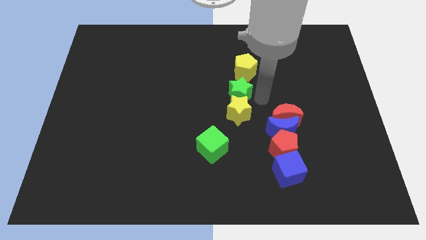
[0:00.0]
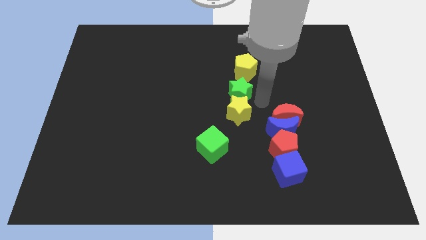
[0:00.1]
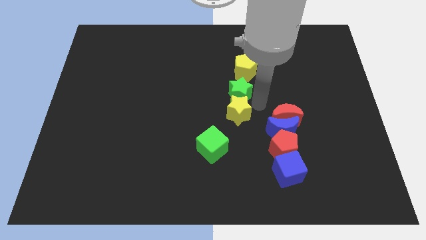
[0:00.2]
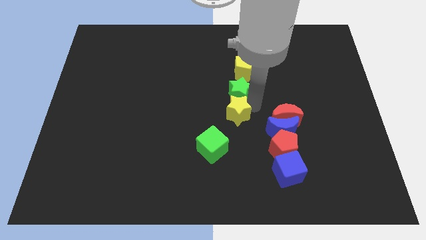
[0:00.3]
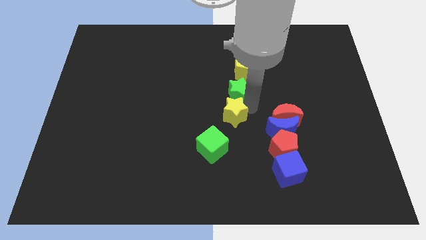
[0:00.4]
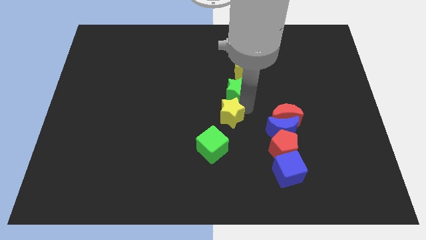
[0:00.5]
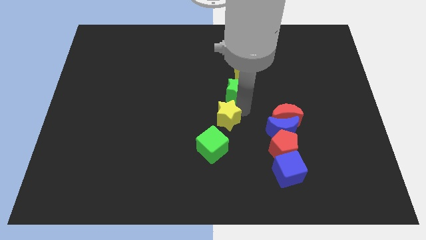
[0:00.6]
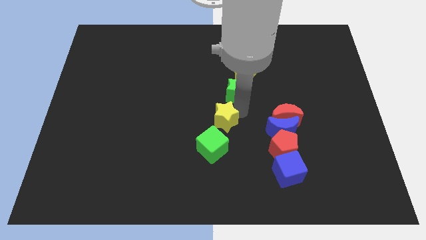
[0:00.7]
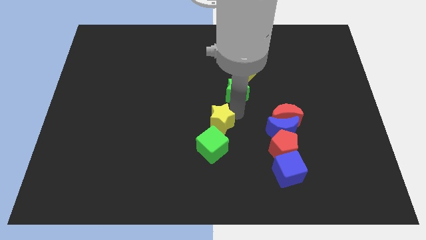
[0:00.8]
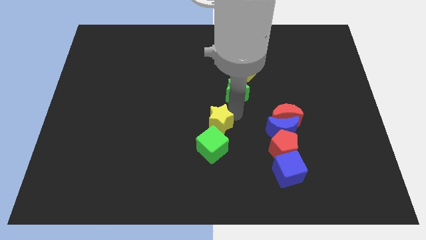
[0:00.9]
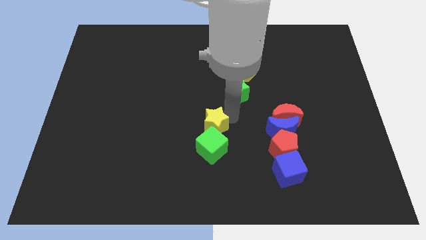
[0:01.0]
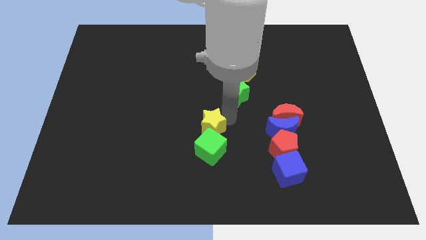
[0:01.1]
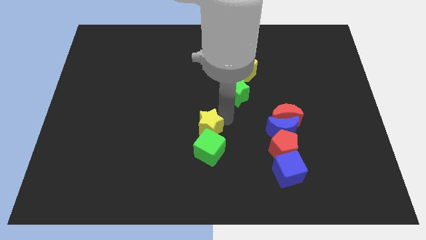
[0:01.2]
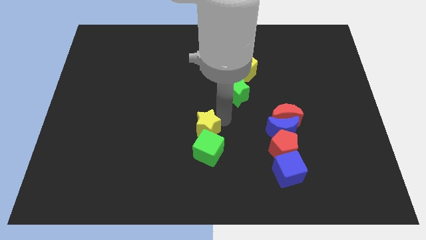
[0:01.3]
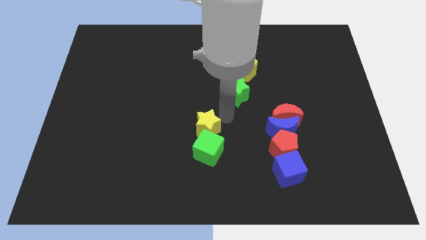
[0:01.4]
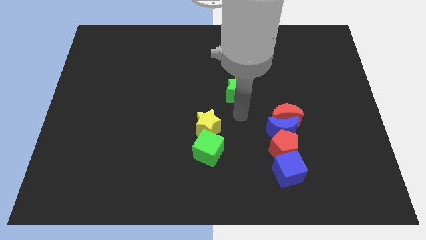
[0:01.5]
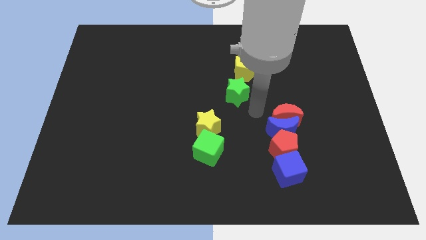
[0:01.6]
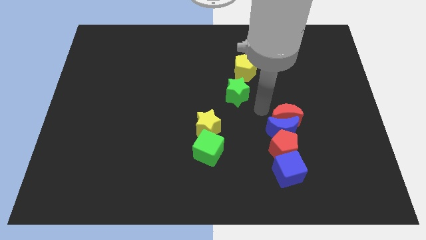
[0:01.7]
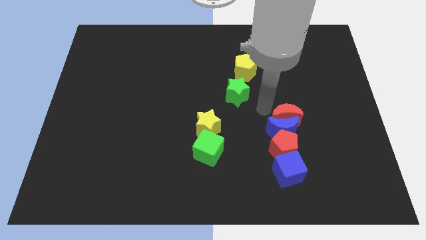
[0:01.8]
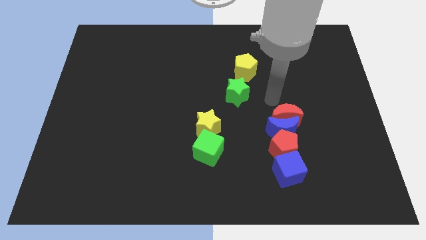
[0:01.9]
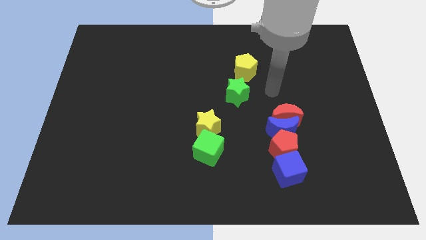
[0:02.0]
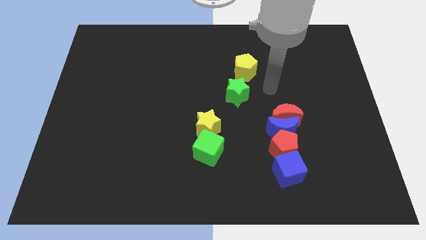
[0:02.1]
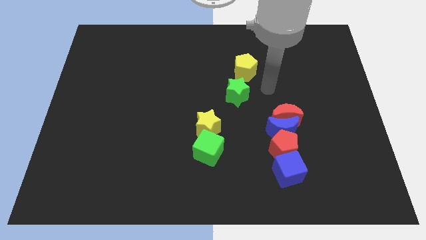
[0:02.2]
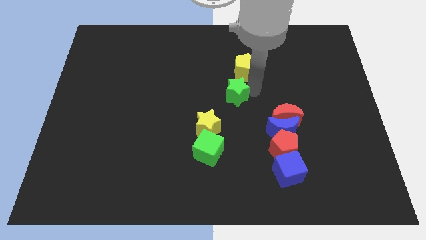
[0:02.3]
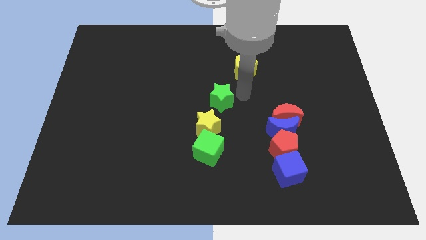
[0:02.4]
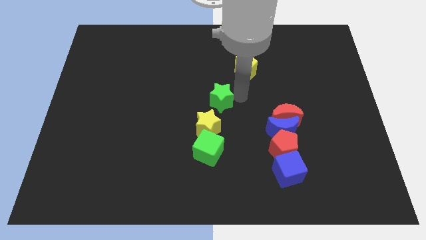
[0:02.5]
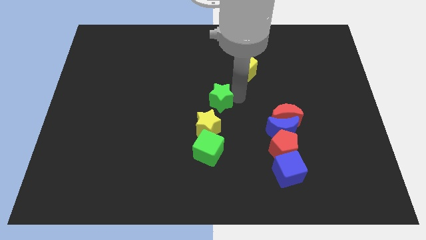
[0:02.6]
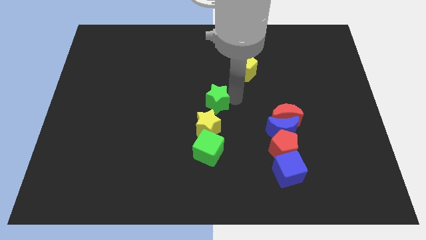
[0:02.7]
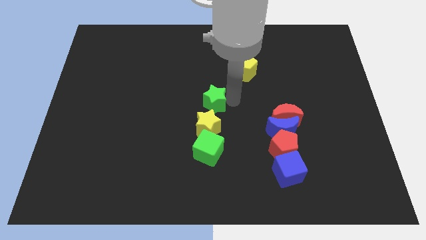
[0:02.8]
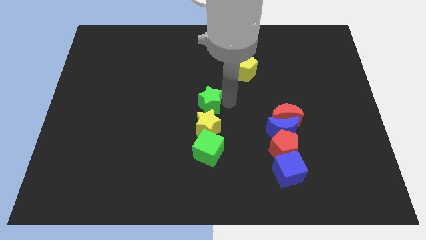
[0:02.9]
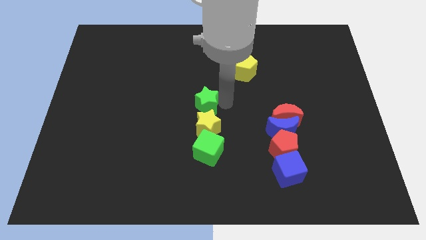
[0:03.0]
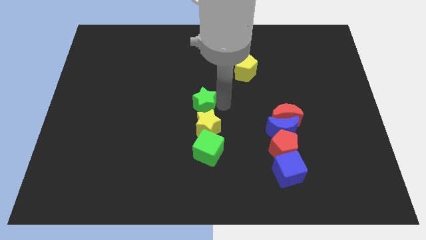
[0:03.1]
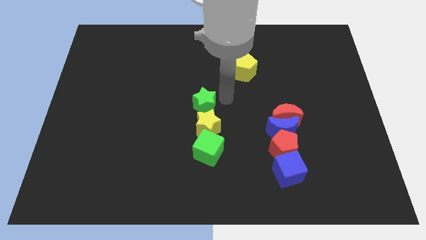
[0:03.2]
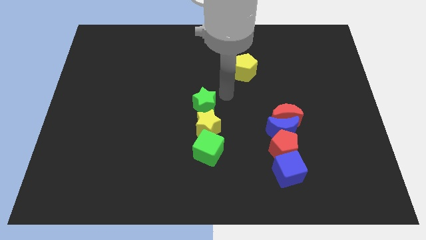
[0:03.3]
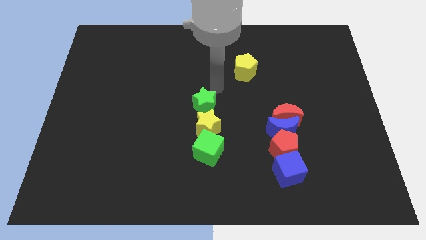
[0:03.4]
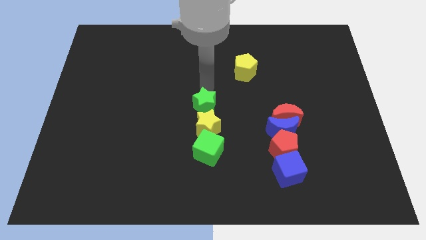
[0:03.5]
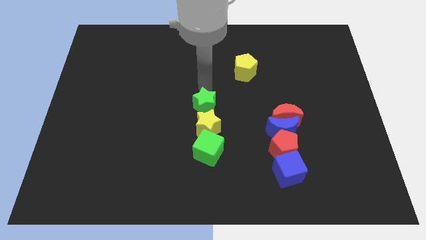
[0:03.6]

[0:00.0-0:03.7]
drag the green star slightly to the left

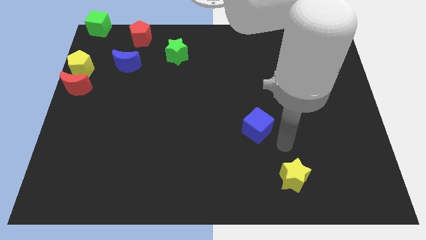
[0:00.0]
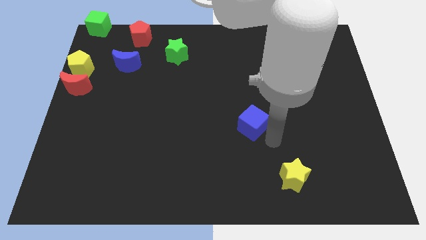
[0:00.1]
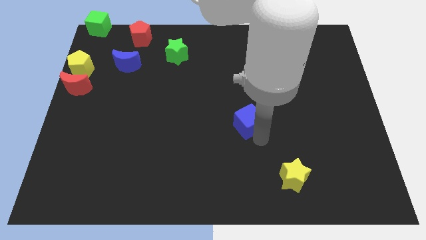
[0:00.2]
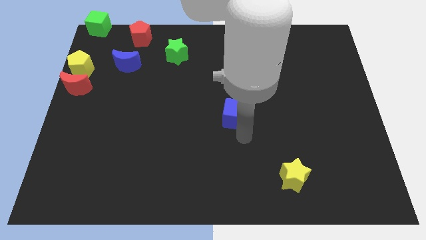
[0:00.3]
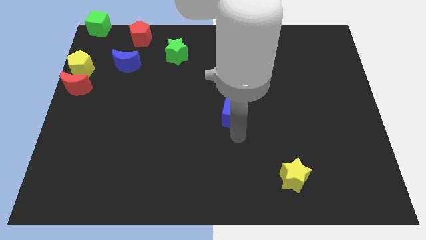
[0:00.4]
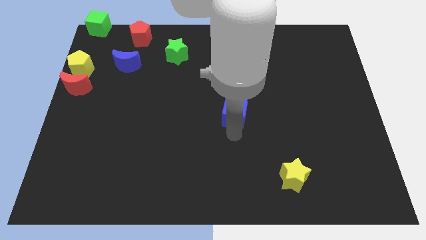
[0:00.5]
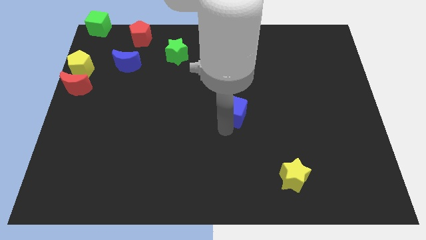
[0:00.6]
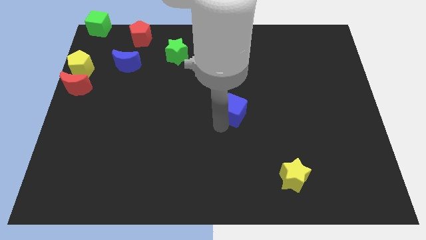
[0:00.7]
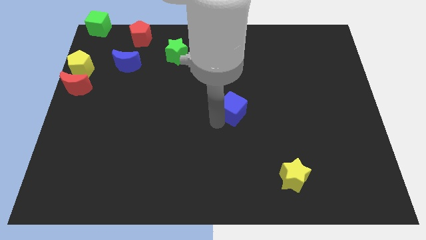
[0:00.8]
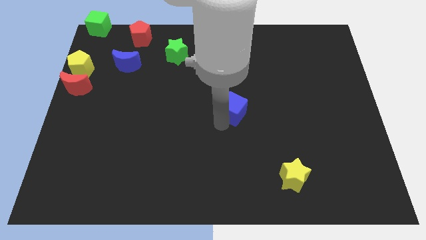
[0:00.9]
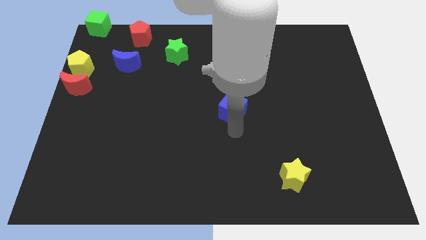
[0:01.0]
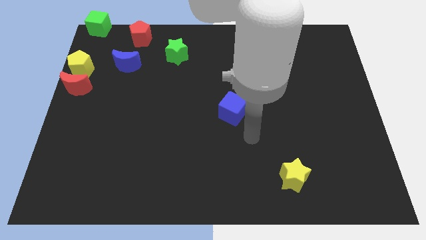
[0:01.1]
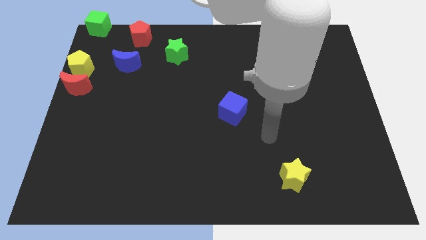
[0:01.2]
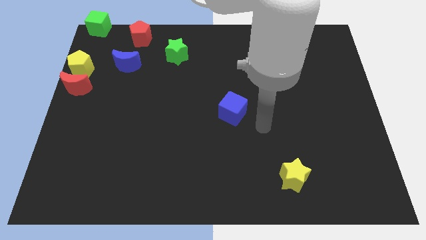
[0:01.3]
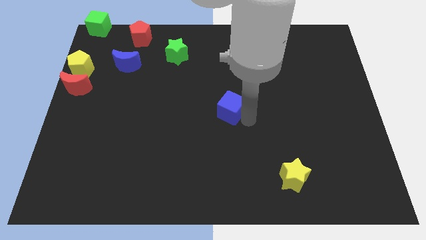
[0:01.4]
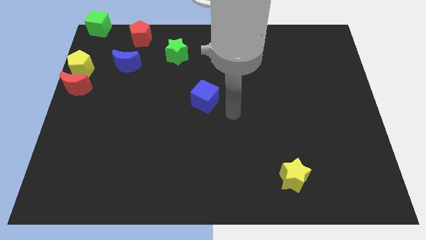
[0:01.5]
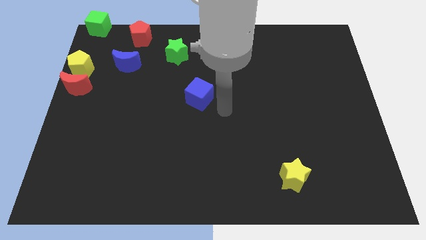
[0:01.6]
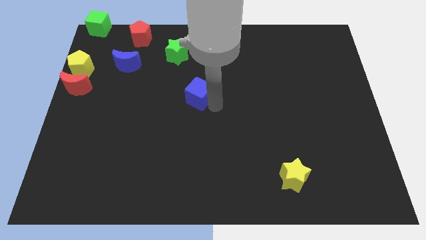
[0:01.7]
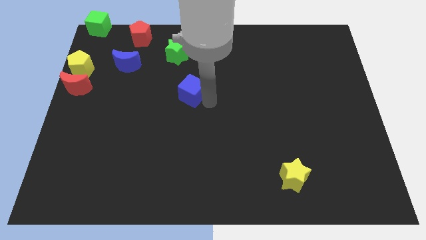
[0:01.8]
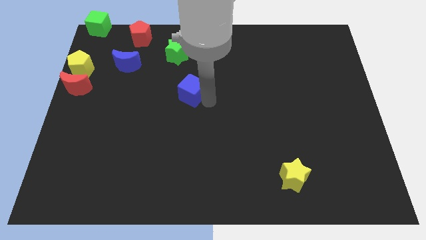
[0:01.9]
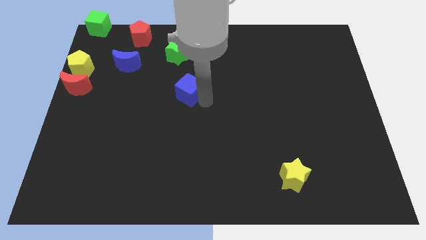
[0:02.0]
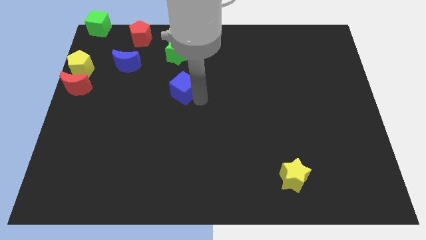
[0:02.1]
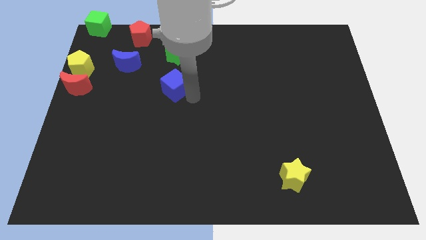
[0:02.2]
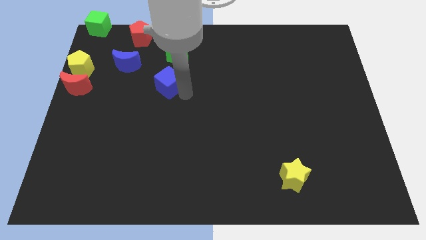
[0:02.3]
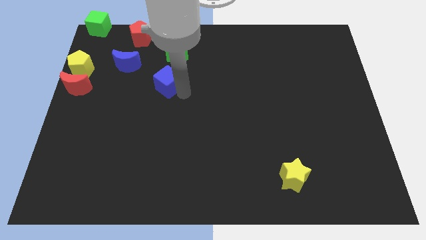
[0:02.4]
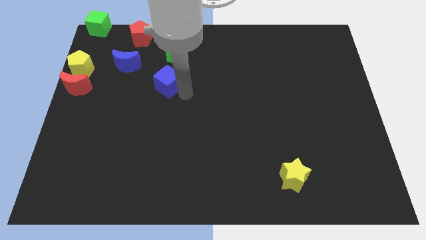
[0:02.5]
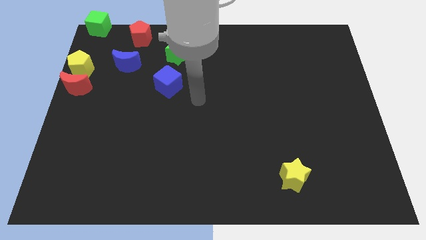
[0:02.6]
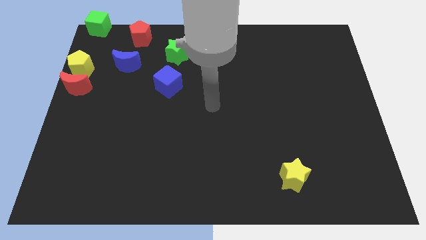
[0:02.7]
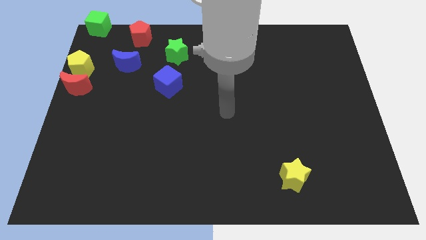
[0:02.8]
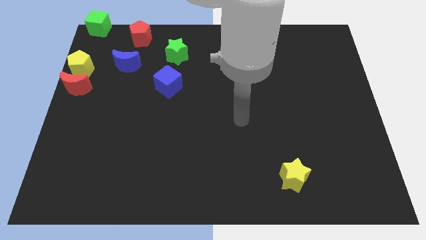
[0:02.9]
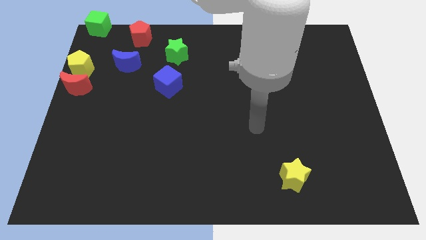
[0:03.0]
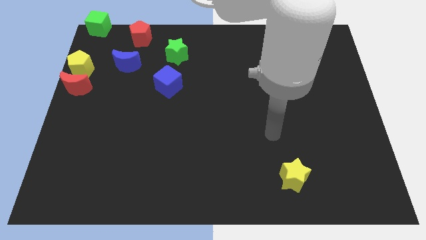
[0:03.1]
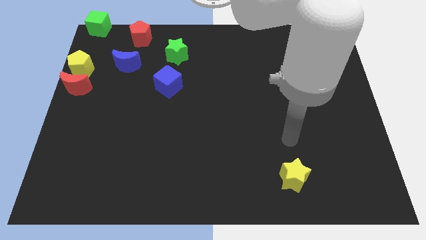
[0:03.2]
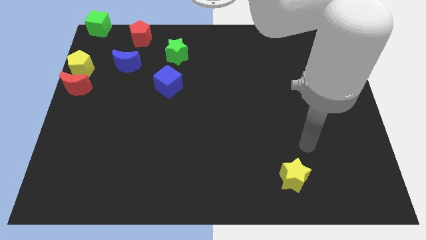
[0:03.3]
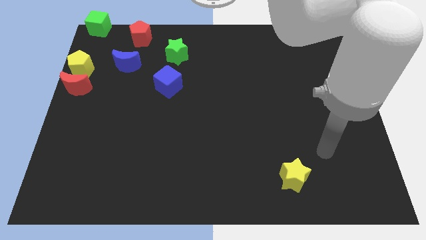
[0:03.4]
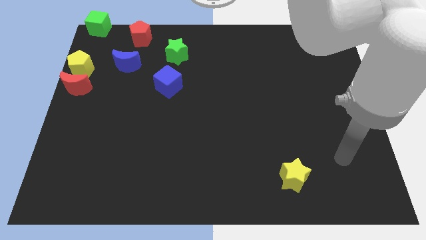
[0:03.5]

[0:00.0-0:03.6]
place the blue cube to the bottom side of the green star

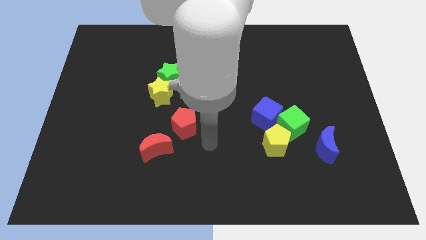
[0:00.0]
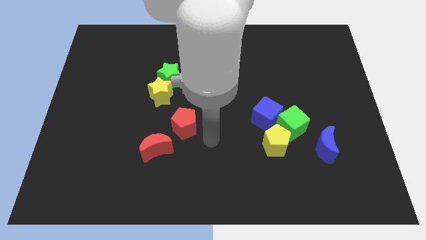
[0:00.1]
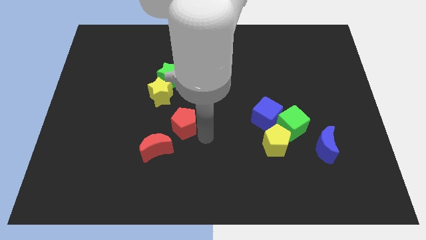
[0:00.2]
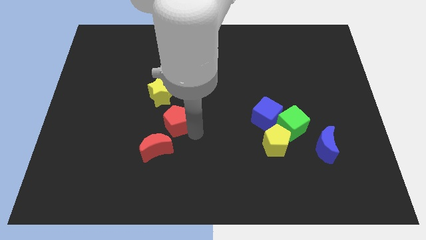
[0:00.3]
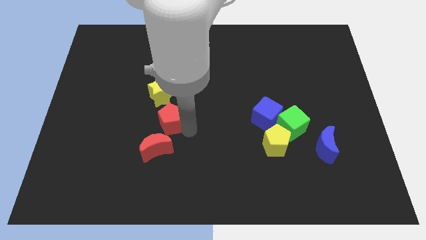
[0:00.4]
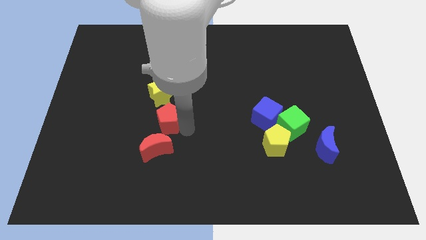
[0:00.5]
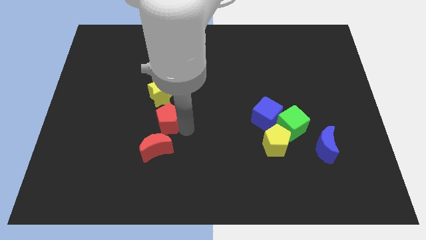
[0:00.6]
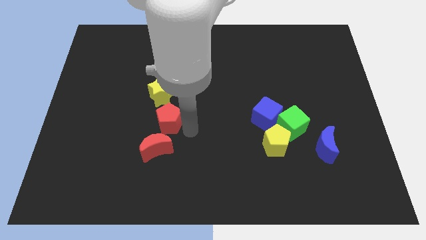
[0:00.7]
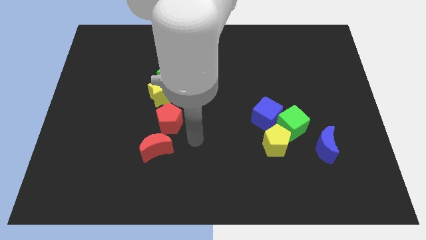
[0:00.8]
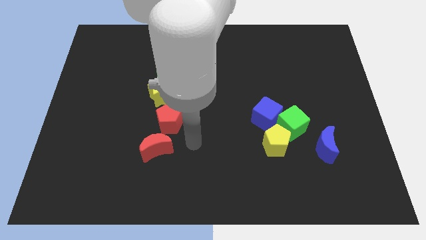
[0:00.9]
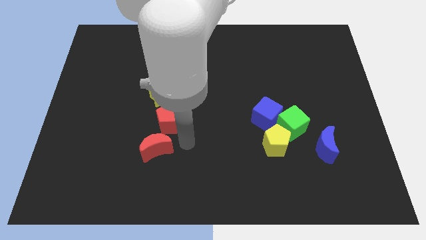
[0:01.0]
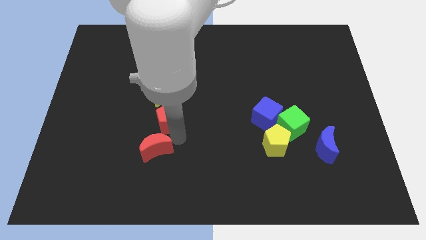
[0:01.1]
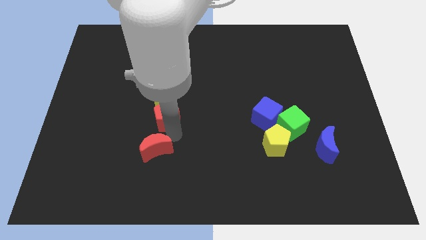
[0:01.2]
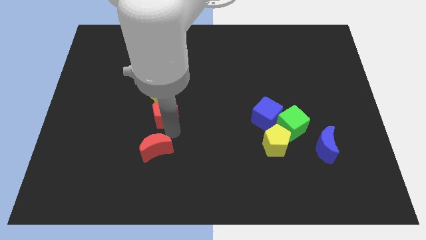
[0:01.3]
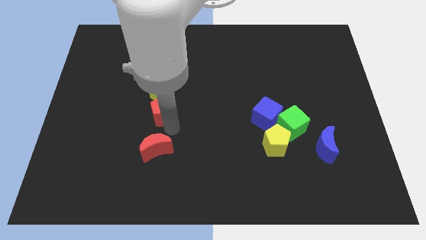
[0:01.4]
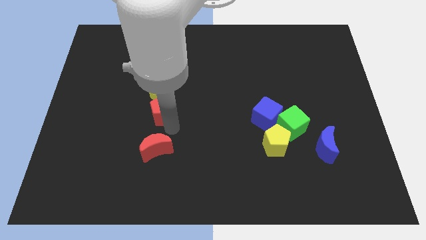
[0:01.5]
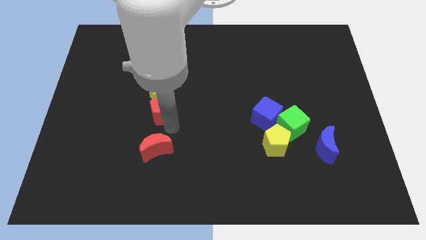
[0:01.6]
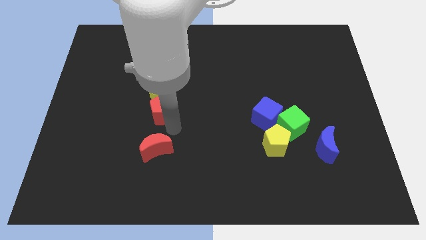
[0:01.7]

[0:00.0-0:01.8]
move the red pentagon towards the bottom side of the yellow star

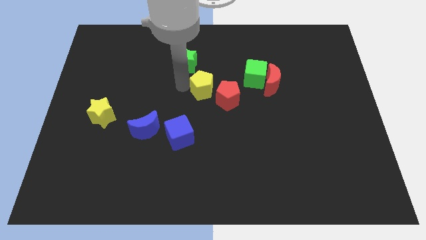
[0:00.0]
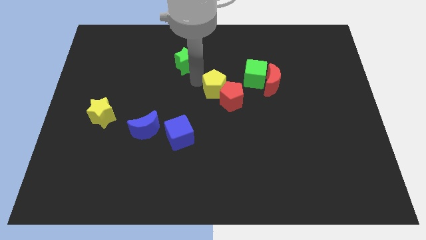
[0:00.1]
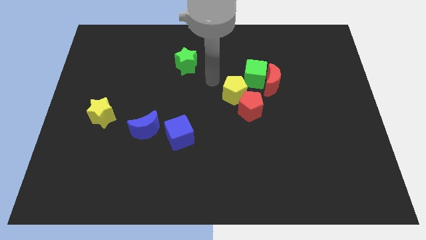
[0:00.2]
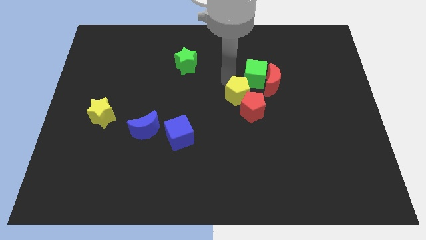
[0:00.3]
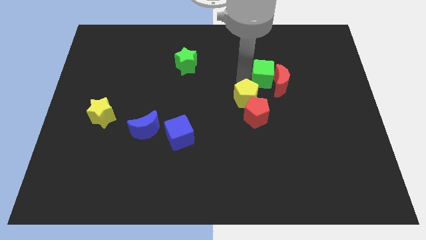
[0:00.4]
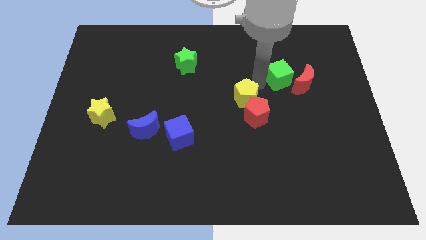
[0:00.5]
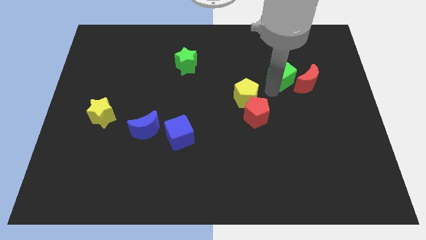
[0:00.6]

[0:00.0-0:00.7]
point your arm between green cube and yellow pentagon
